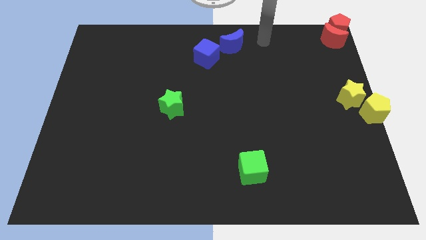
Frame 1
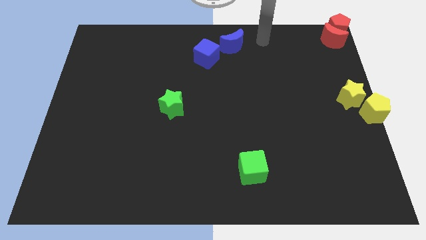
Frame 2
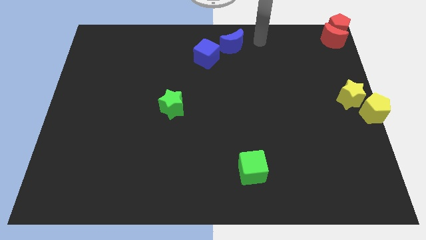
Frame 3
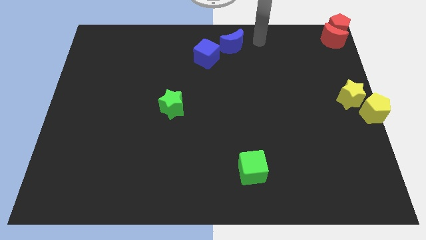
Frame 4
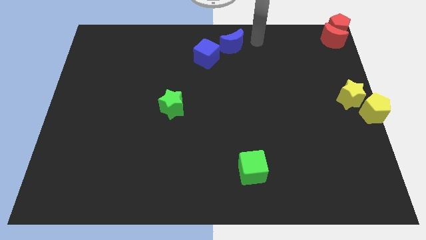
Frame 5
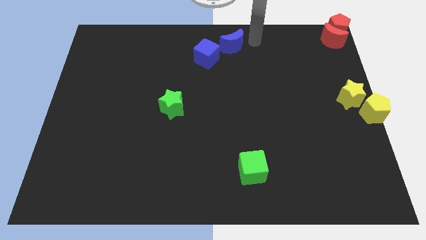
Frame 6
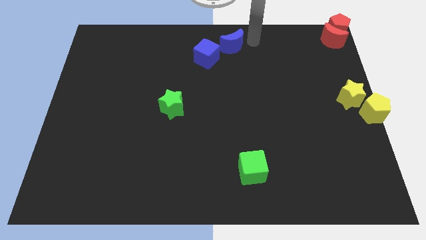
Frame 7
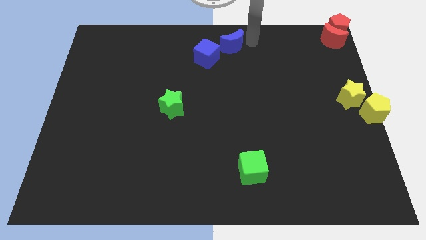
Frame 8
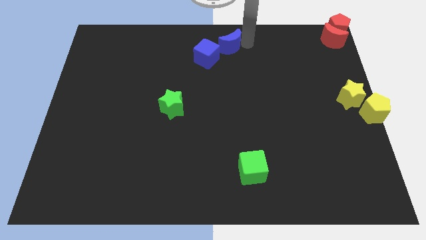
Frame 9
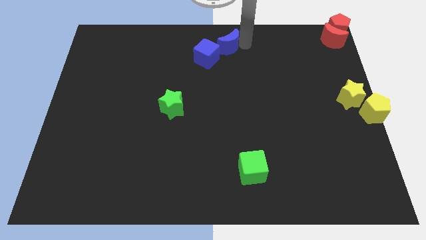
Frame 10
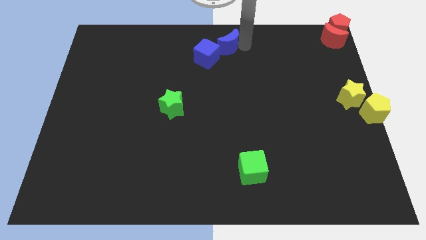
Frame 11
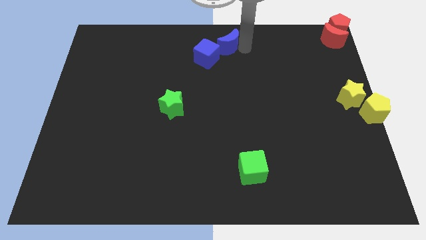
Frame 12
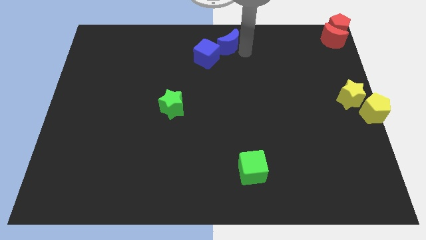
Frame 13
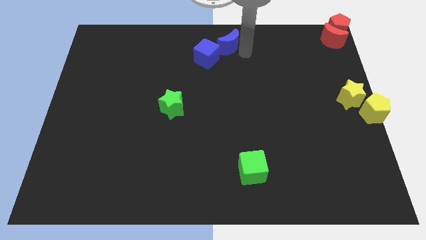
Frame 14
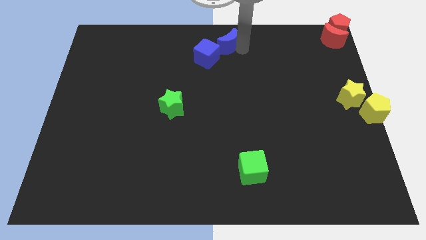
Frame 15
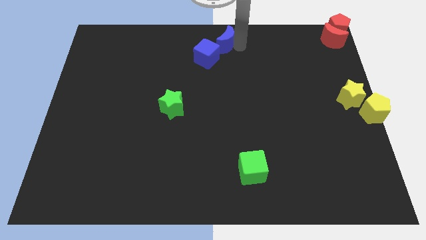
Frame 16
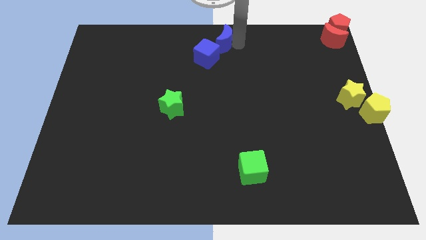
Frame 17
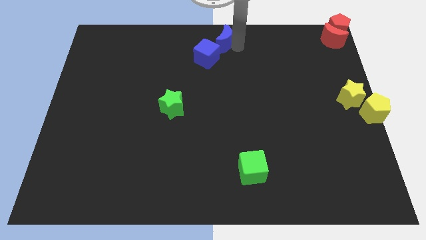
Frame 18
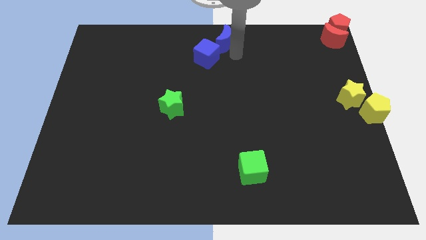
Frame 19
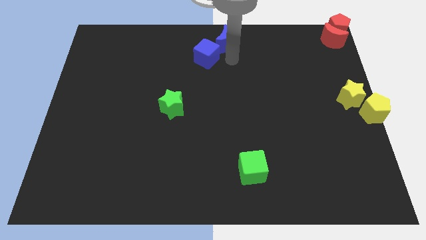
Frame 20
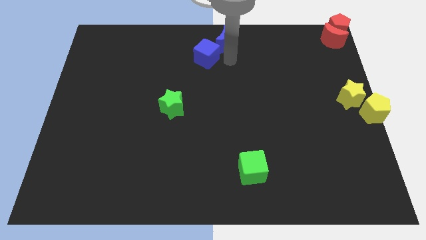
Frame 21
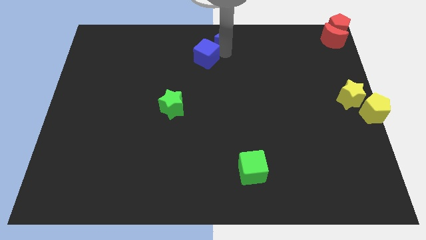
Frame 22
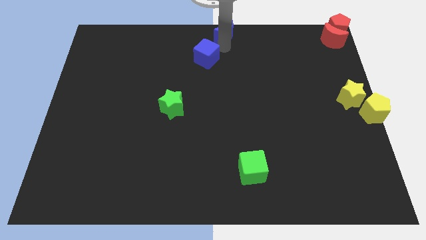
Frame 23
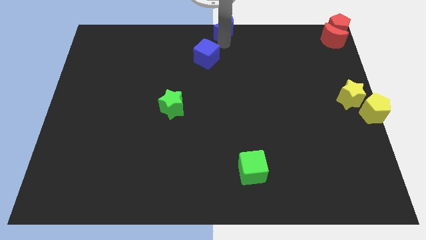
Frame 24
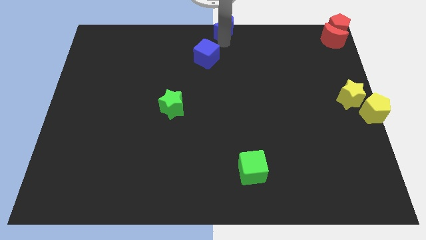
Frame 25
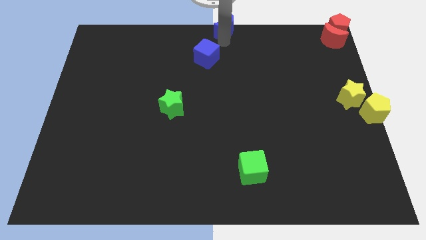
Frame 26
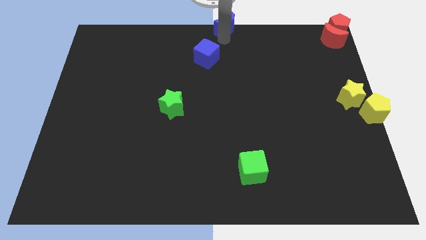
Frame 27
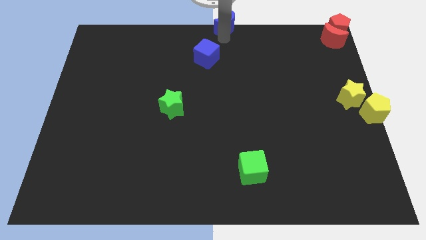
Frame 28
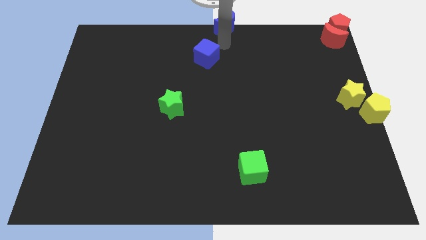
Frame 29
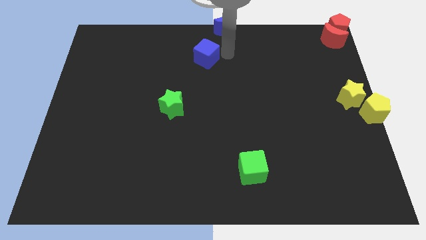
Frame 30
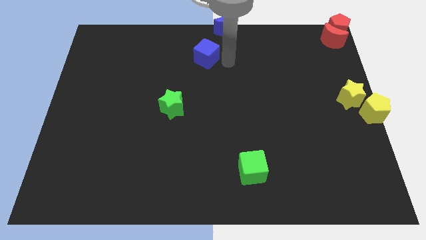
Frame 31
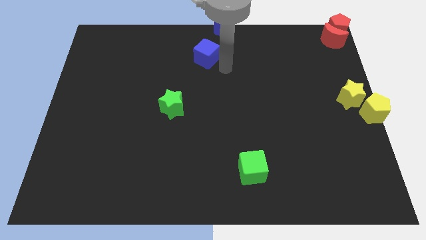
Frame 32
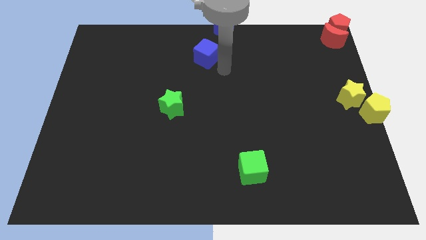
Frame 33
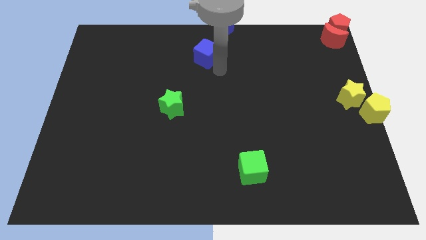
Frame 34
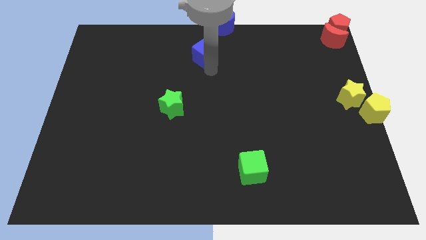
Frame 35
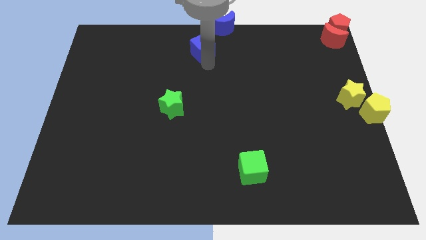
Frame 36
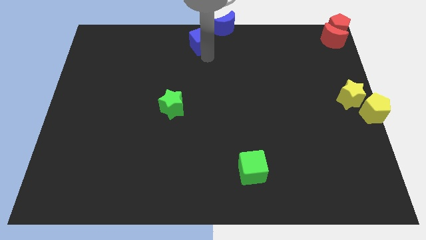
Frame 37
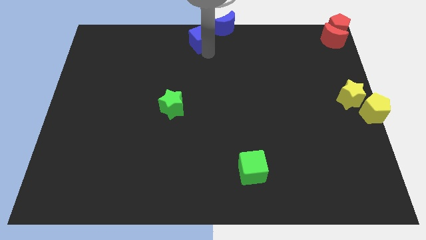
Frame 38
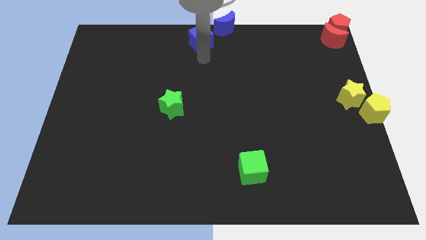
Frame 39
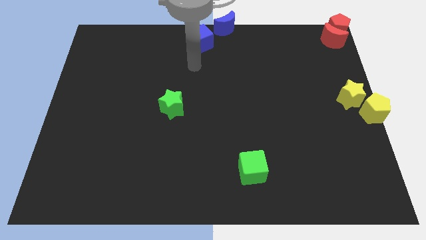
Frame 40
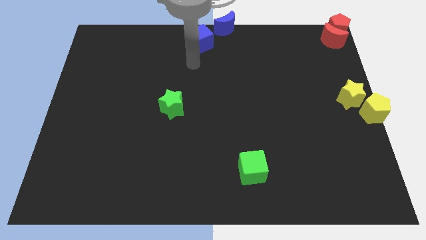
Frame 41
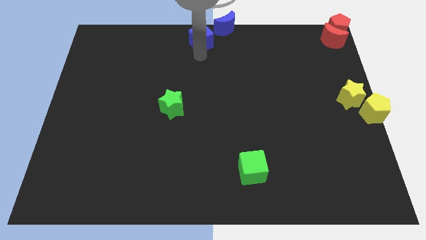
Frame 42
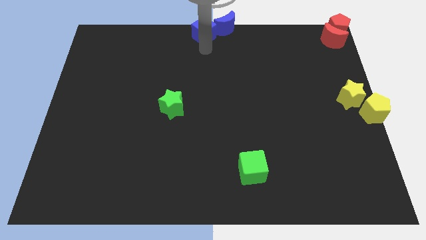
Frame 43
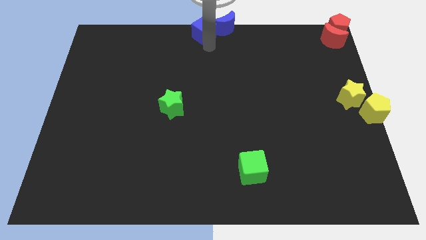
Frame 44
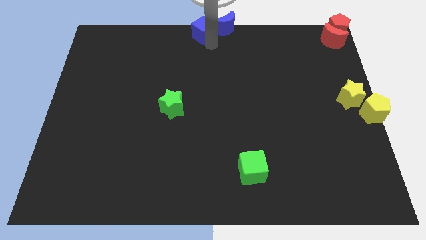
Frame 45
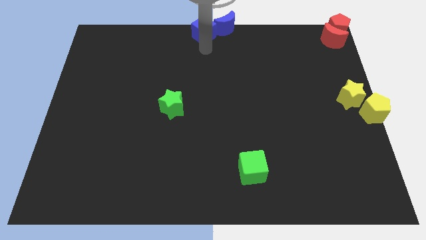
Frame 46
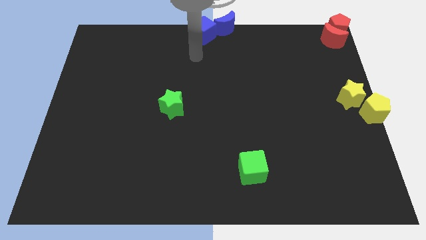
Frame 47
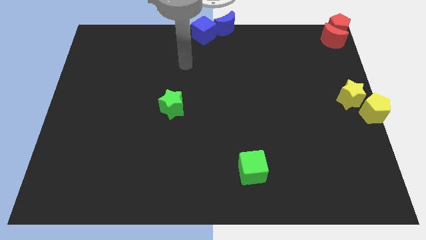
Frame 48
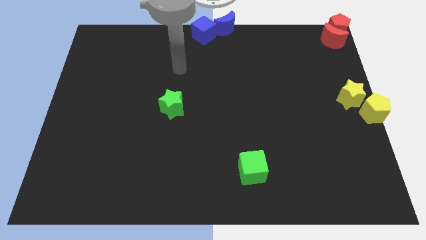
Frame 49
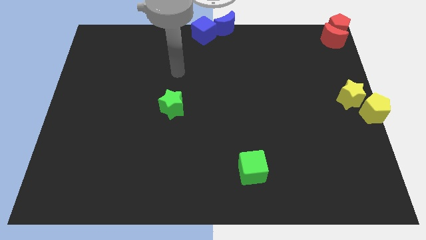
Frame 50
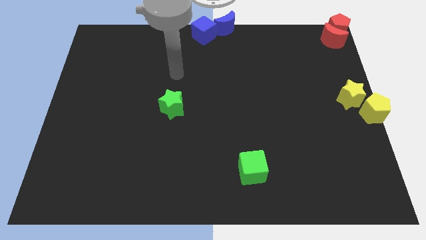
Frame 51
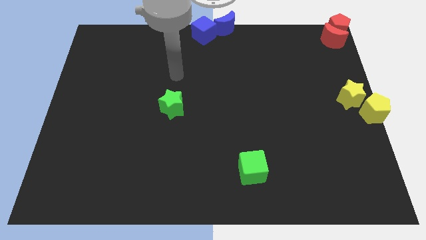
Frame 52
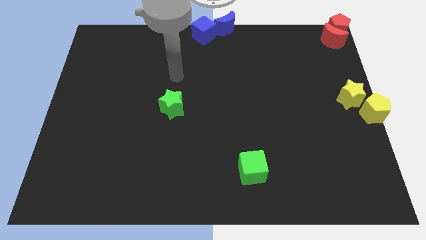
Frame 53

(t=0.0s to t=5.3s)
place the blue blocks at the top center of the board

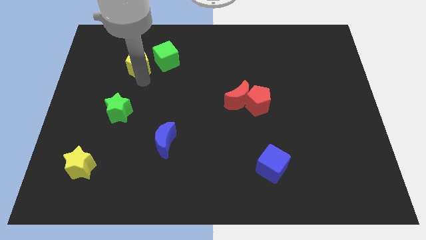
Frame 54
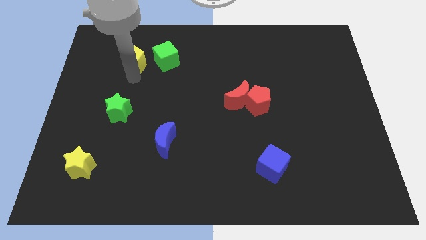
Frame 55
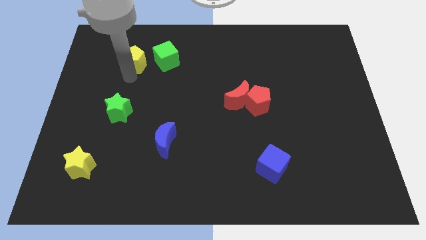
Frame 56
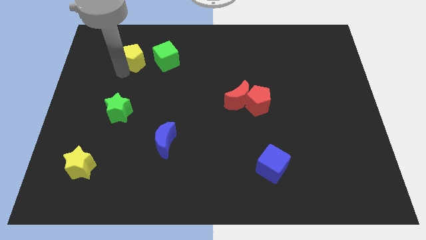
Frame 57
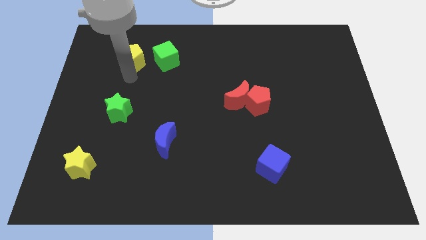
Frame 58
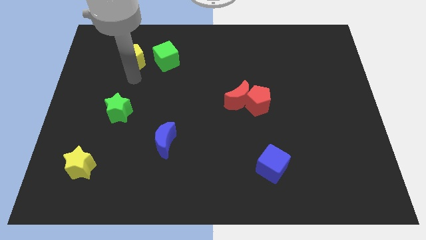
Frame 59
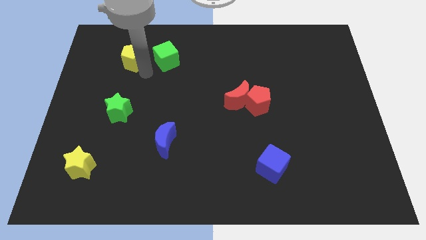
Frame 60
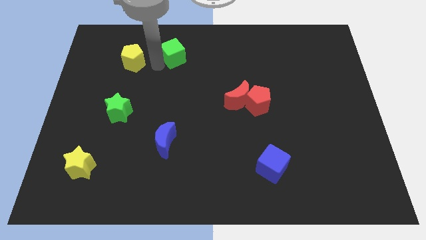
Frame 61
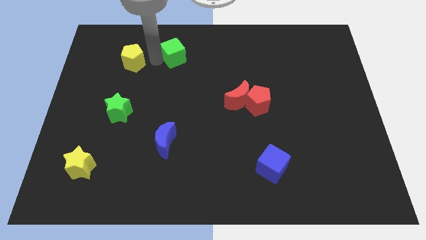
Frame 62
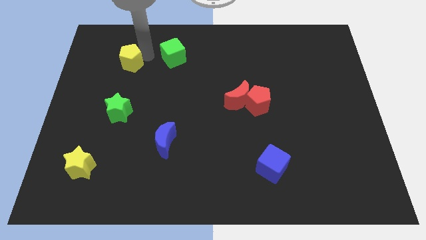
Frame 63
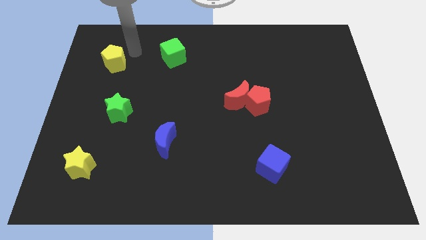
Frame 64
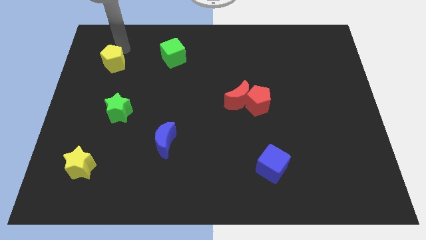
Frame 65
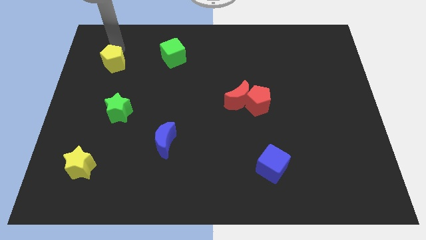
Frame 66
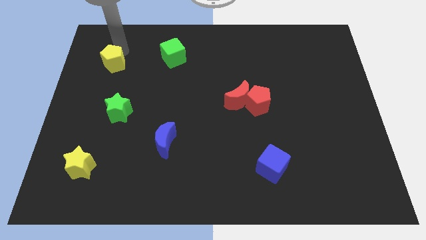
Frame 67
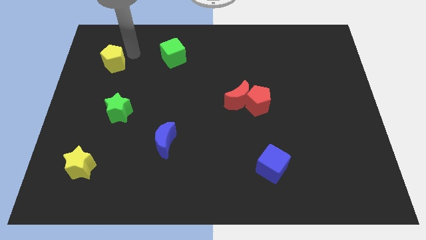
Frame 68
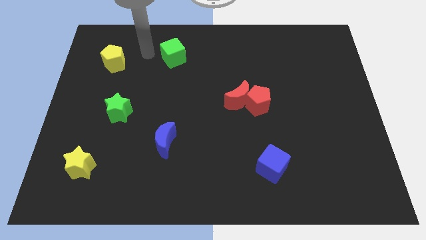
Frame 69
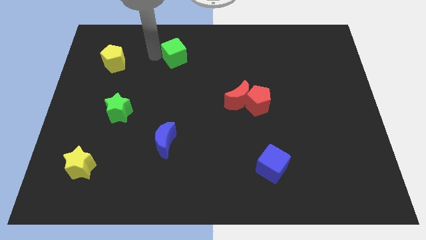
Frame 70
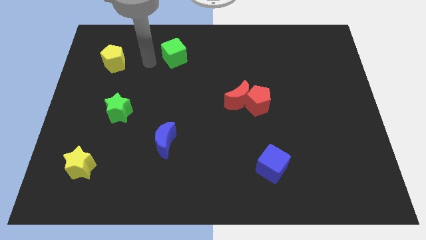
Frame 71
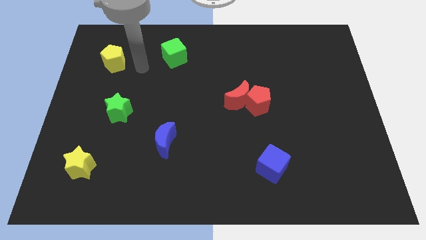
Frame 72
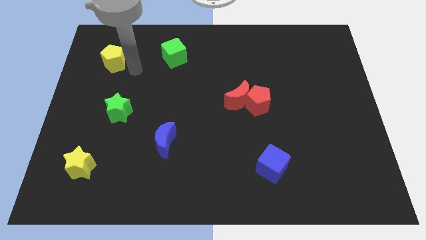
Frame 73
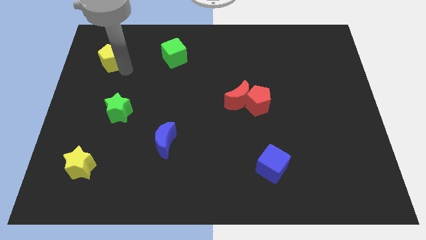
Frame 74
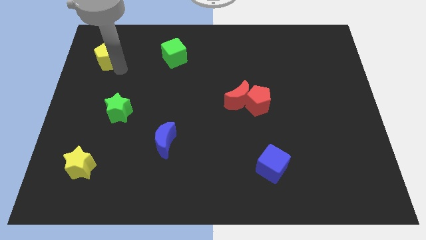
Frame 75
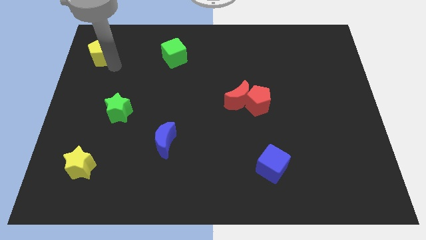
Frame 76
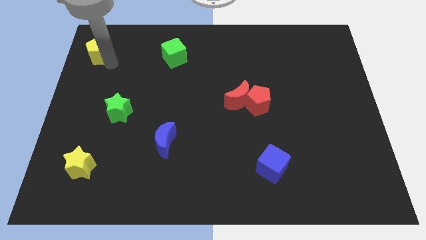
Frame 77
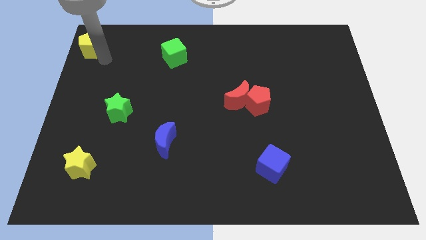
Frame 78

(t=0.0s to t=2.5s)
push the yellow pentagon to the top left of the board

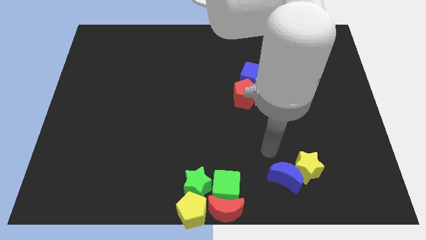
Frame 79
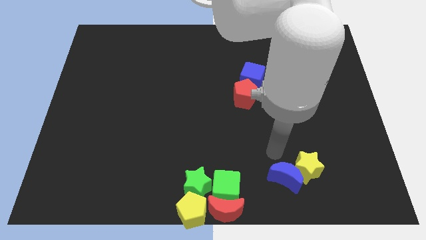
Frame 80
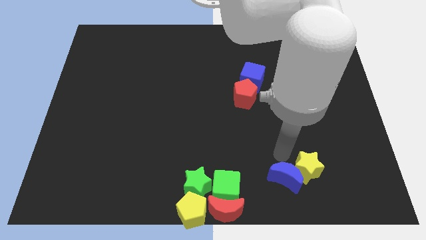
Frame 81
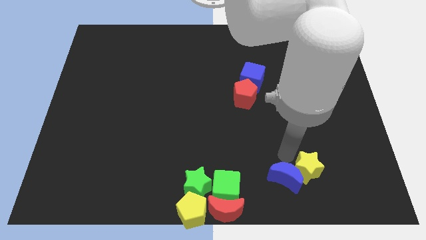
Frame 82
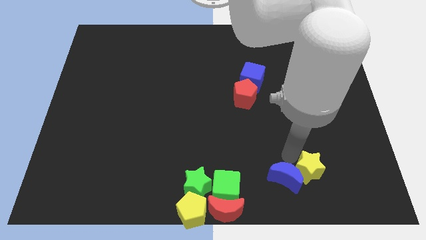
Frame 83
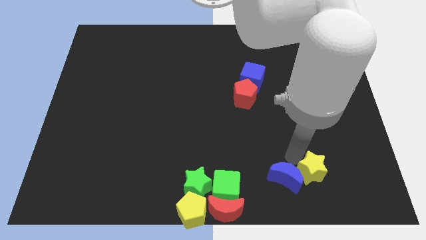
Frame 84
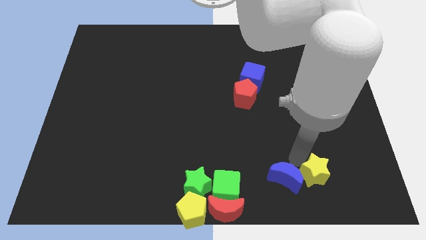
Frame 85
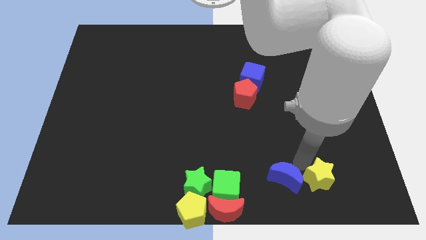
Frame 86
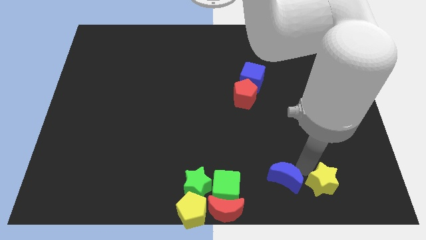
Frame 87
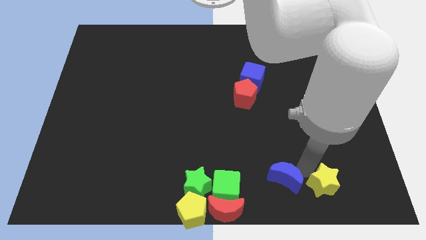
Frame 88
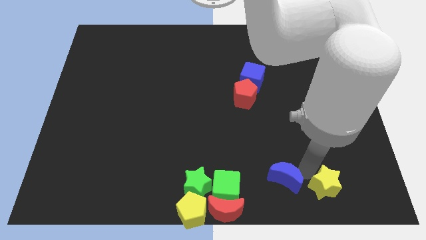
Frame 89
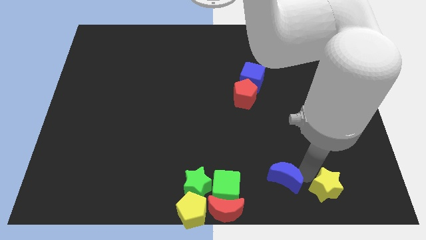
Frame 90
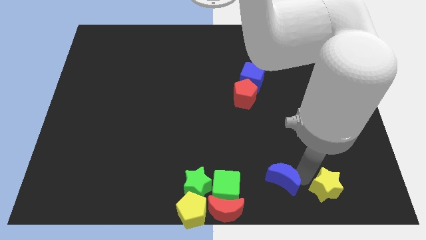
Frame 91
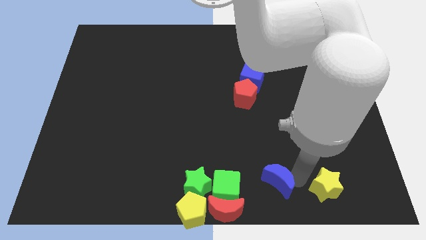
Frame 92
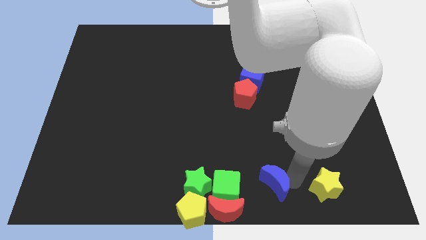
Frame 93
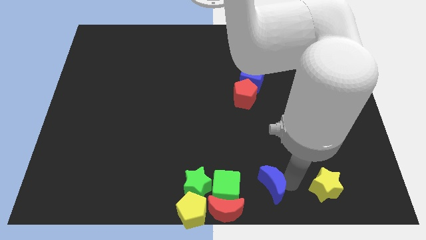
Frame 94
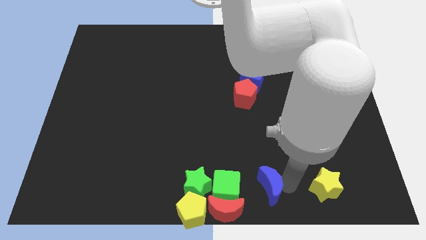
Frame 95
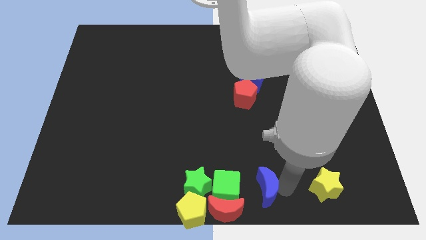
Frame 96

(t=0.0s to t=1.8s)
separate the blue crescent and yellow star
